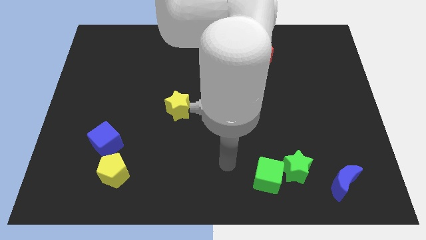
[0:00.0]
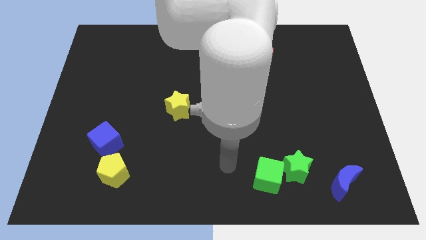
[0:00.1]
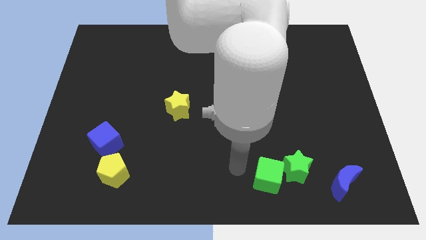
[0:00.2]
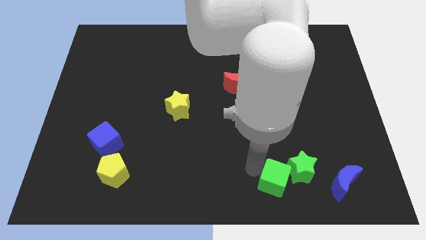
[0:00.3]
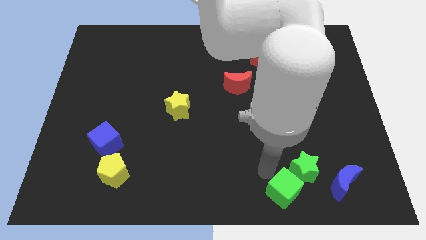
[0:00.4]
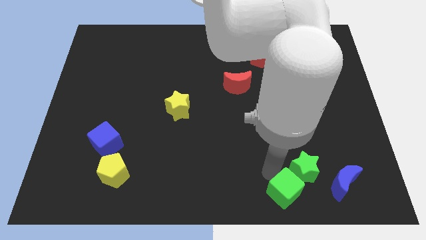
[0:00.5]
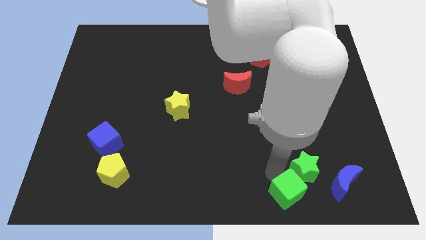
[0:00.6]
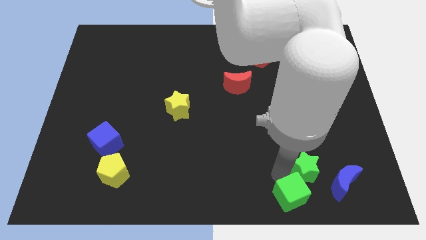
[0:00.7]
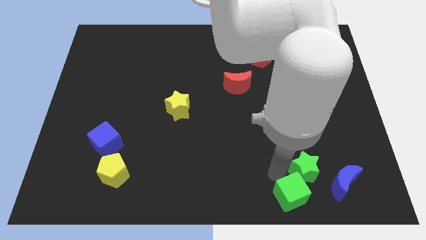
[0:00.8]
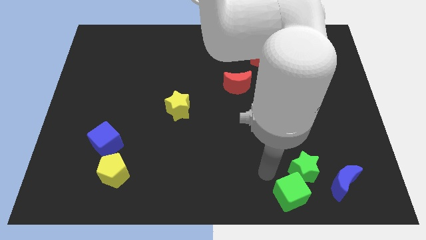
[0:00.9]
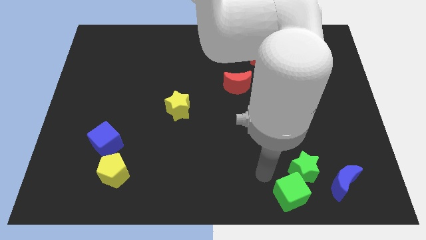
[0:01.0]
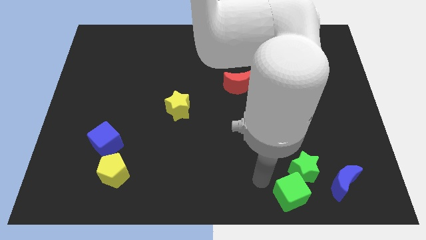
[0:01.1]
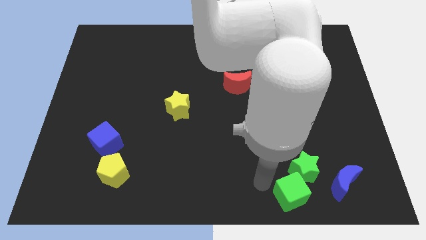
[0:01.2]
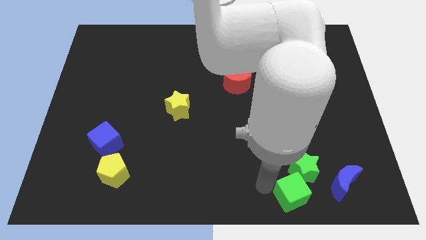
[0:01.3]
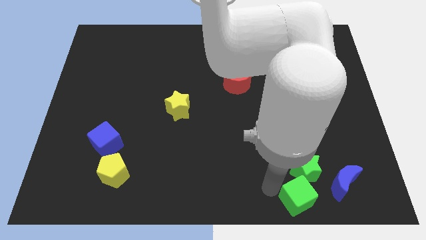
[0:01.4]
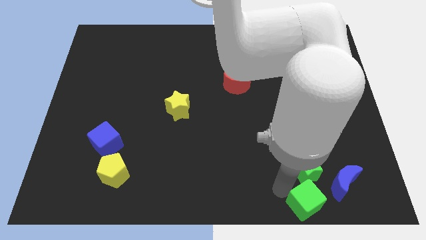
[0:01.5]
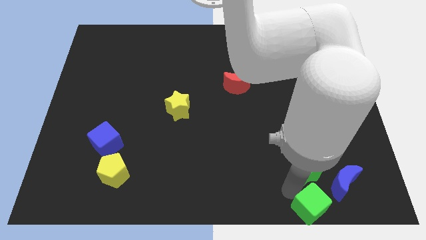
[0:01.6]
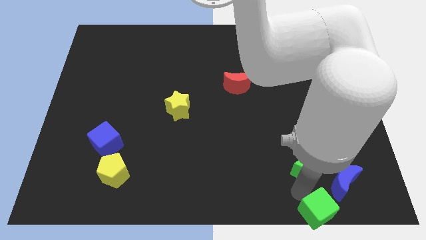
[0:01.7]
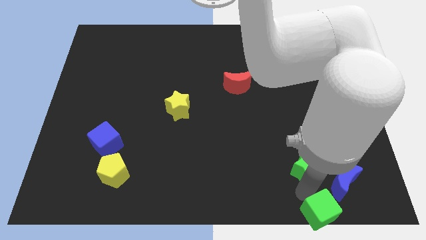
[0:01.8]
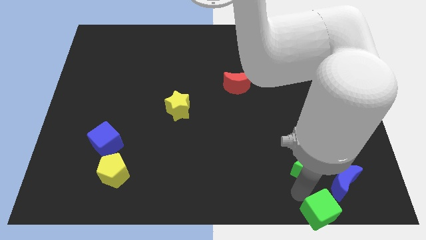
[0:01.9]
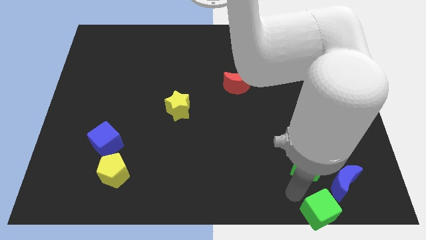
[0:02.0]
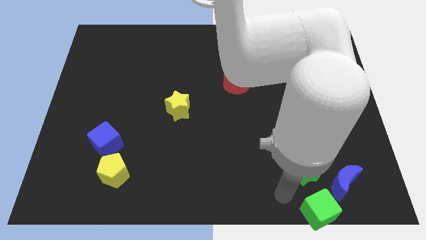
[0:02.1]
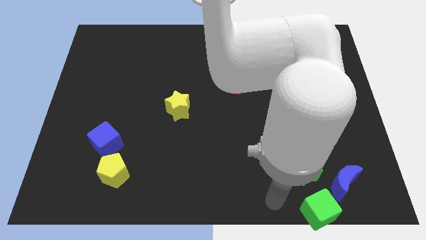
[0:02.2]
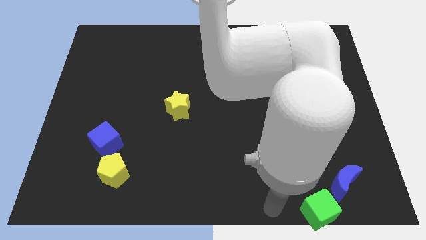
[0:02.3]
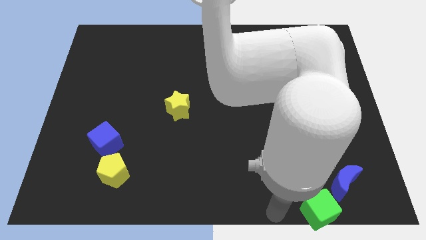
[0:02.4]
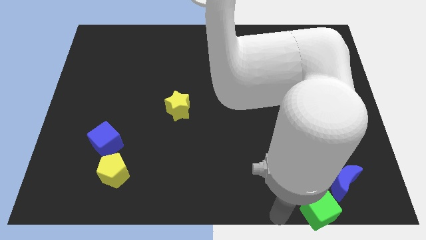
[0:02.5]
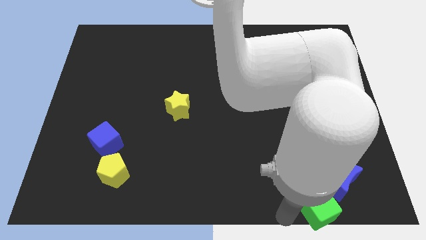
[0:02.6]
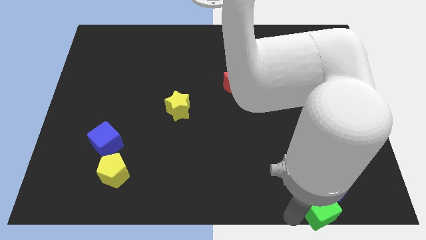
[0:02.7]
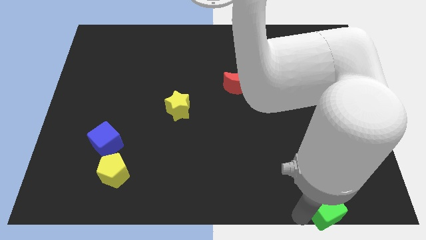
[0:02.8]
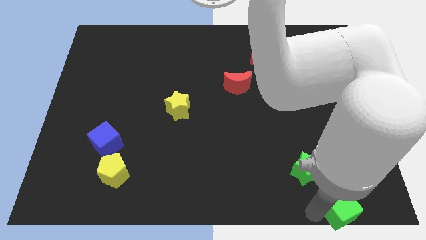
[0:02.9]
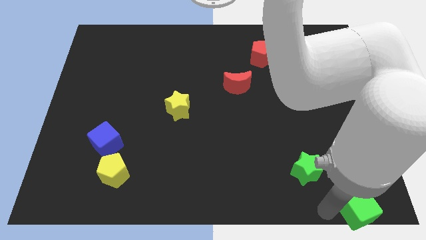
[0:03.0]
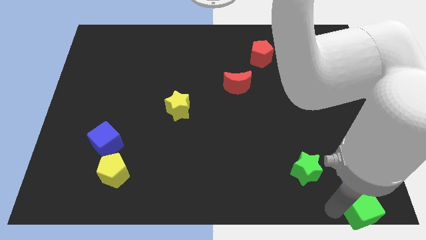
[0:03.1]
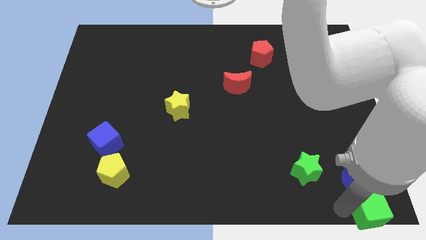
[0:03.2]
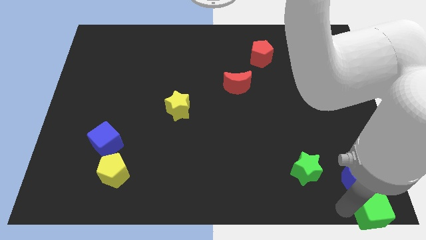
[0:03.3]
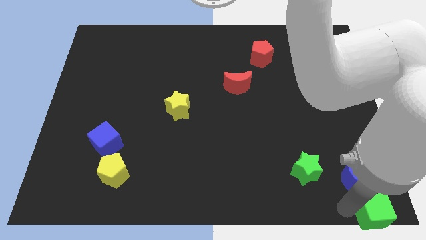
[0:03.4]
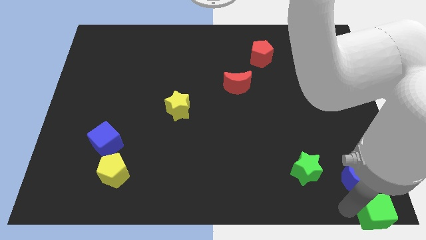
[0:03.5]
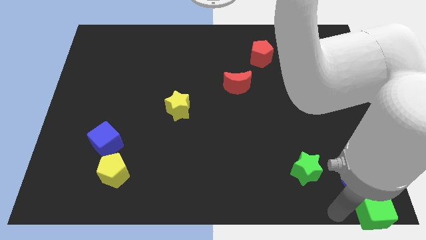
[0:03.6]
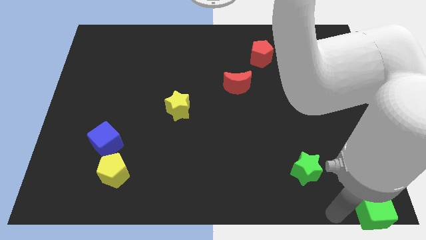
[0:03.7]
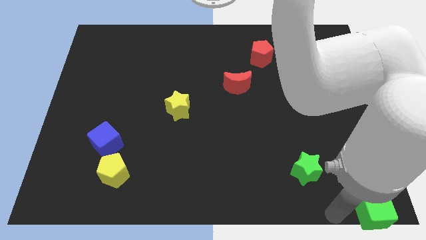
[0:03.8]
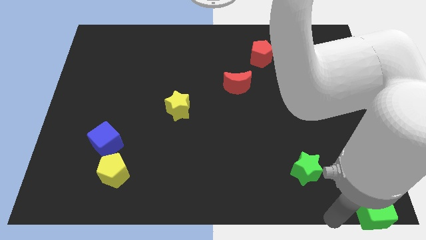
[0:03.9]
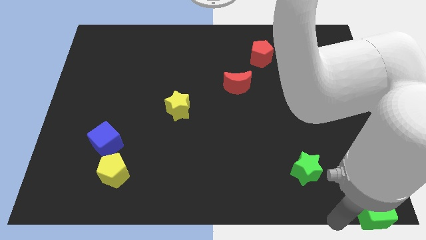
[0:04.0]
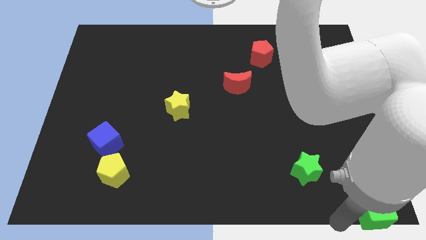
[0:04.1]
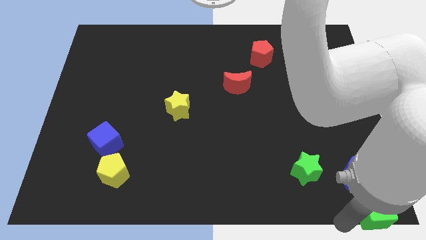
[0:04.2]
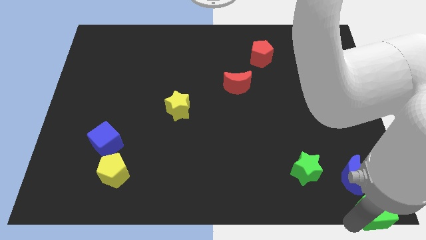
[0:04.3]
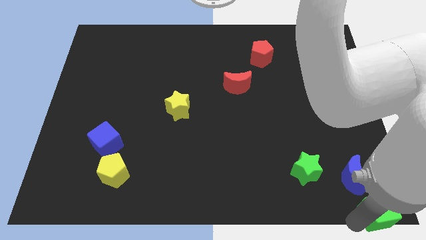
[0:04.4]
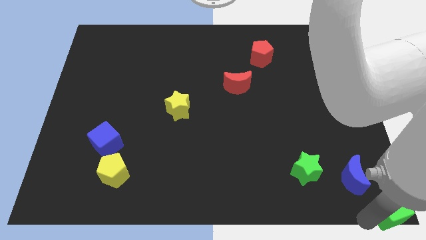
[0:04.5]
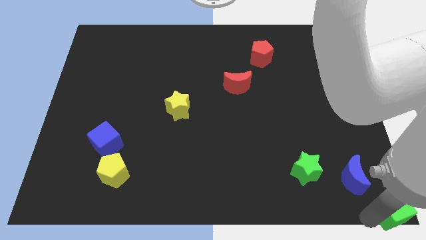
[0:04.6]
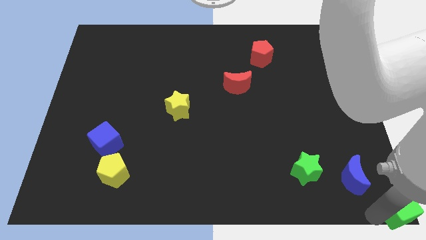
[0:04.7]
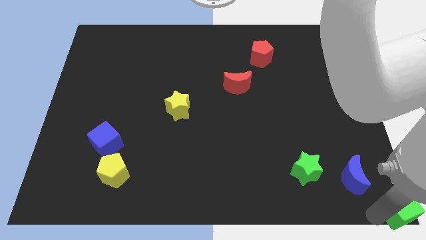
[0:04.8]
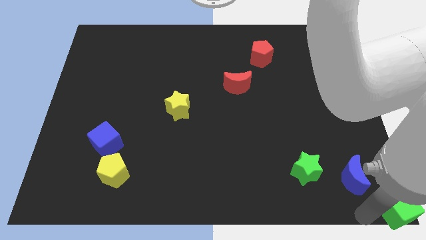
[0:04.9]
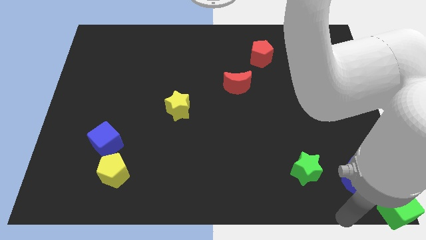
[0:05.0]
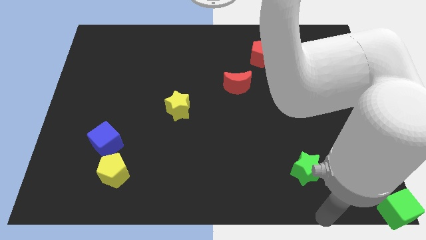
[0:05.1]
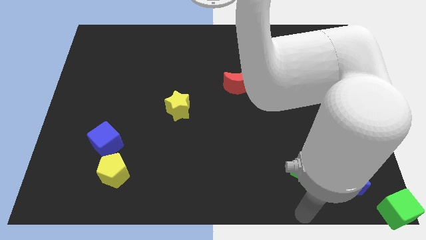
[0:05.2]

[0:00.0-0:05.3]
move the green cube to the bottom right corner of the board

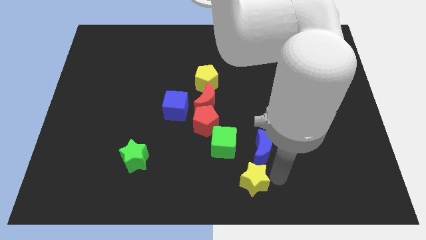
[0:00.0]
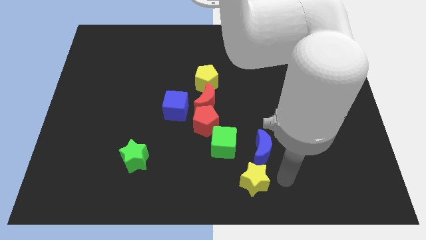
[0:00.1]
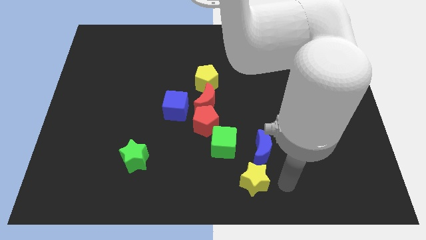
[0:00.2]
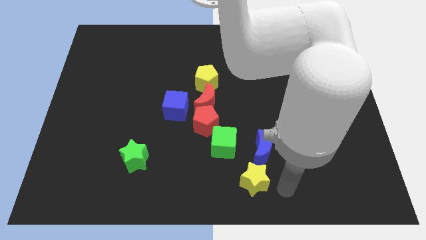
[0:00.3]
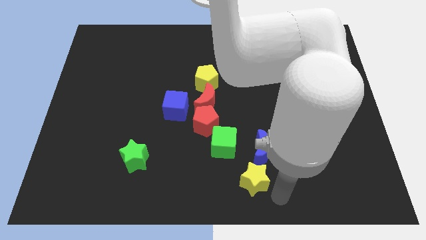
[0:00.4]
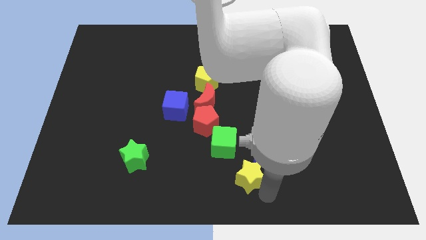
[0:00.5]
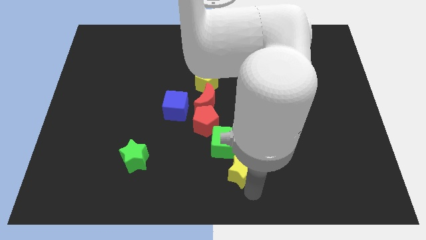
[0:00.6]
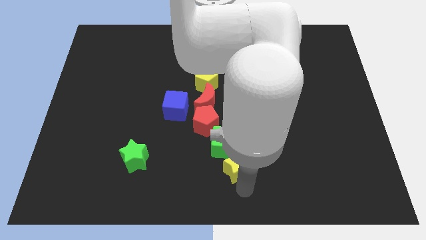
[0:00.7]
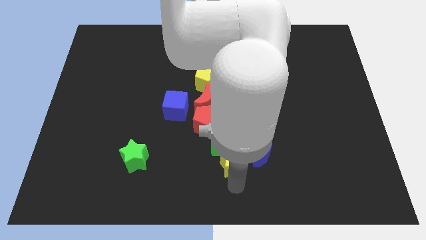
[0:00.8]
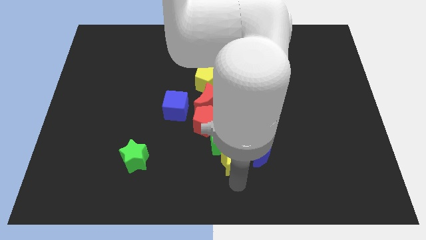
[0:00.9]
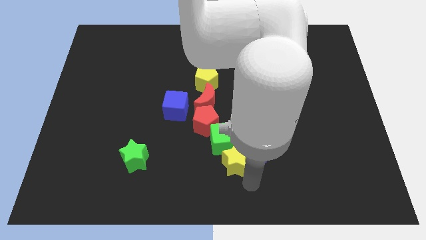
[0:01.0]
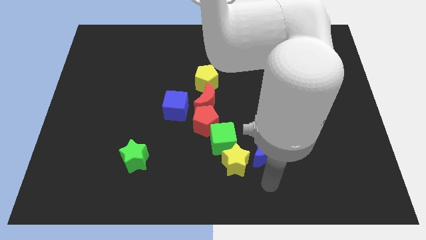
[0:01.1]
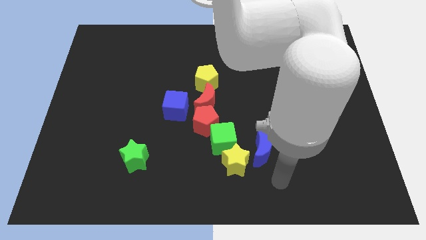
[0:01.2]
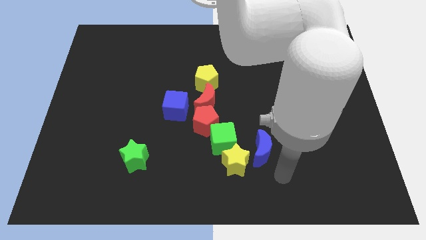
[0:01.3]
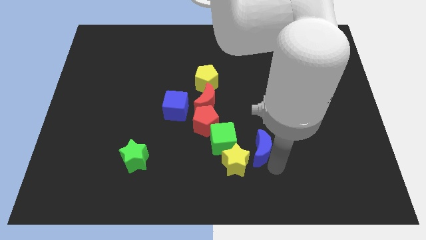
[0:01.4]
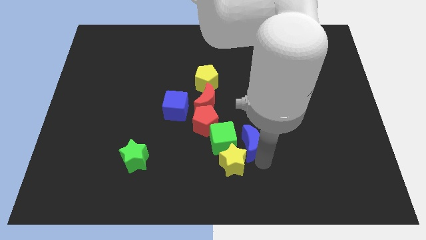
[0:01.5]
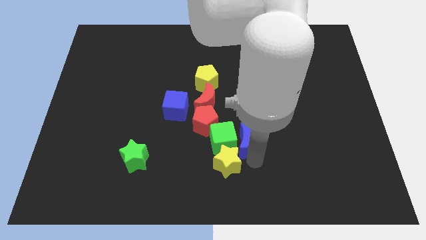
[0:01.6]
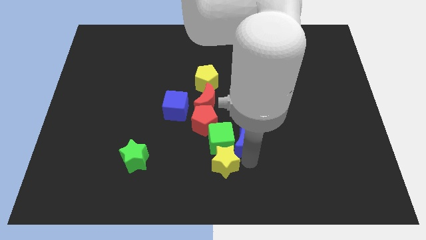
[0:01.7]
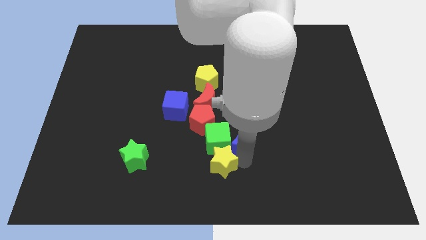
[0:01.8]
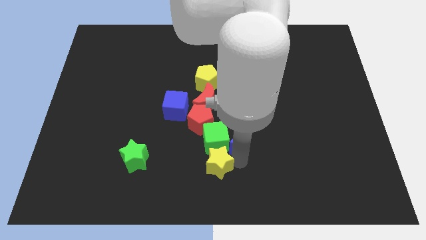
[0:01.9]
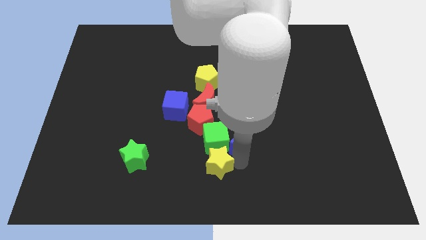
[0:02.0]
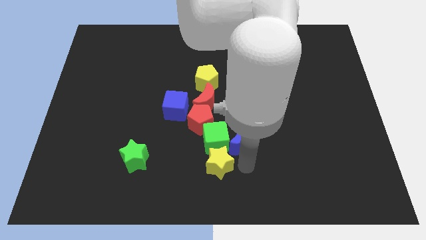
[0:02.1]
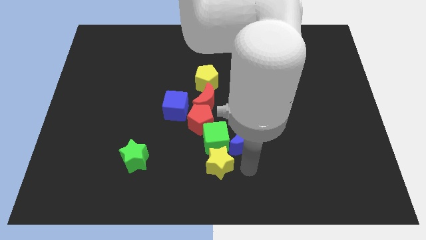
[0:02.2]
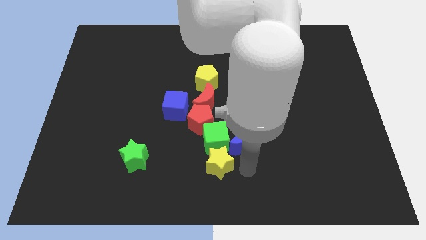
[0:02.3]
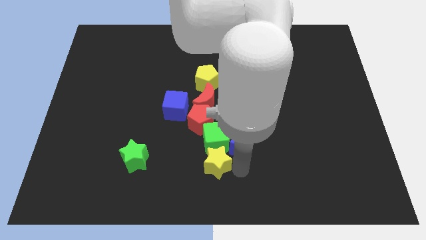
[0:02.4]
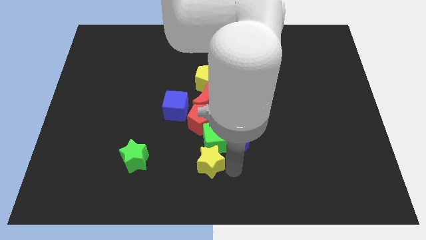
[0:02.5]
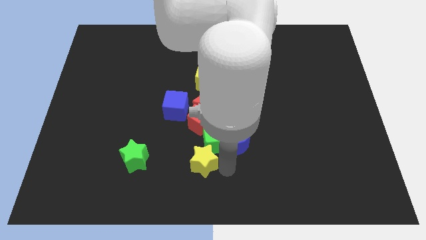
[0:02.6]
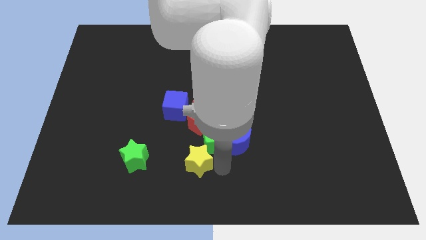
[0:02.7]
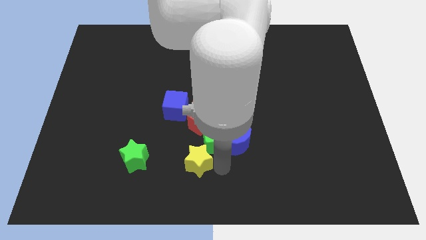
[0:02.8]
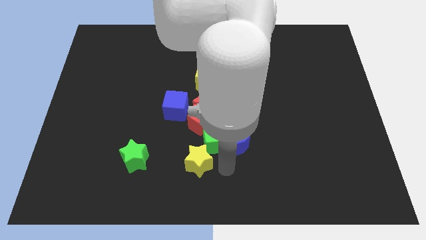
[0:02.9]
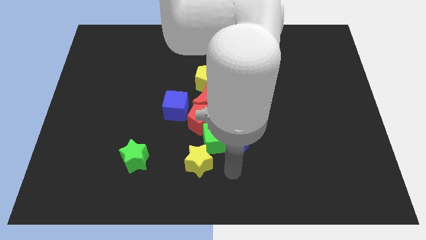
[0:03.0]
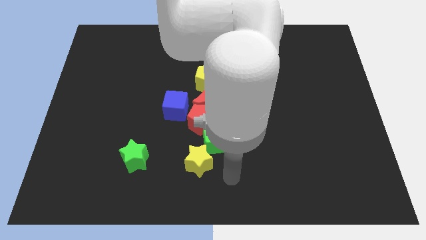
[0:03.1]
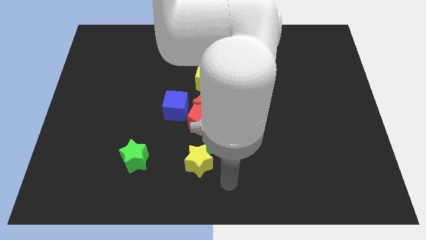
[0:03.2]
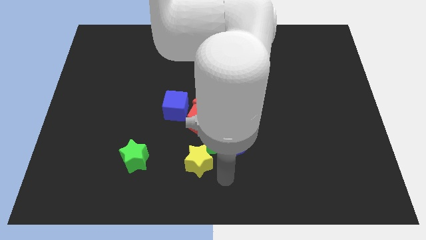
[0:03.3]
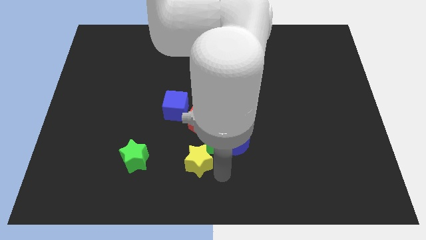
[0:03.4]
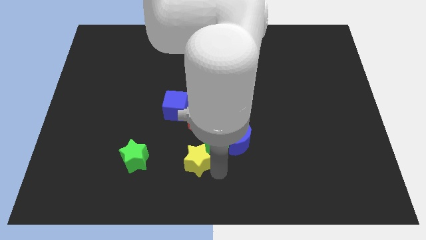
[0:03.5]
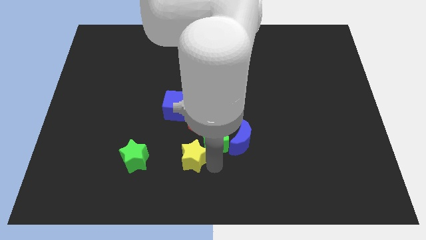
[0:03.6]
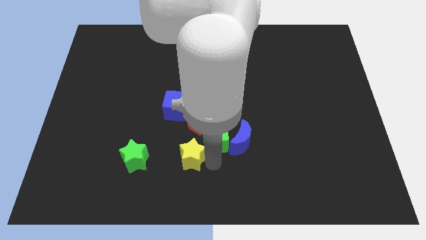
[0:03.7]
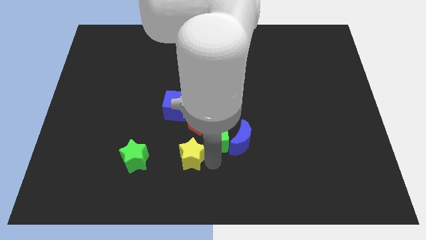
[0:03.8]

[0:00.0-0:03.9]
place the yellow star right to the green star
